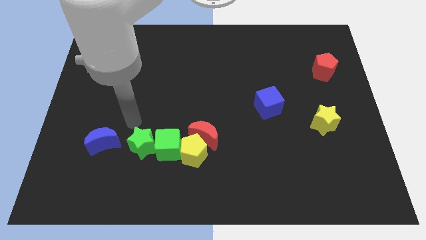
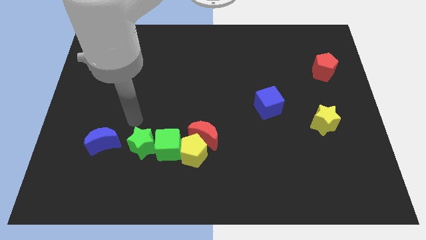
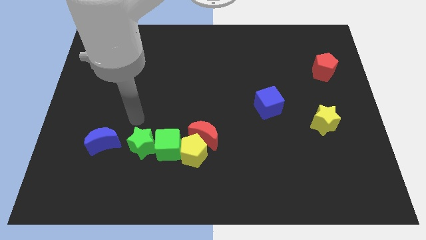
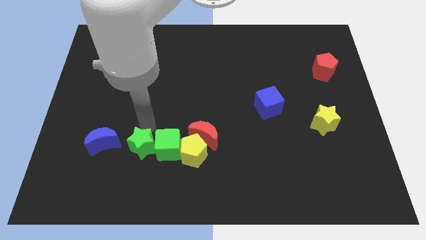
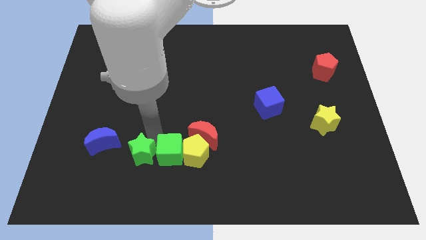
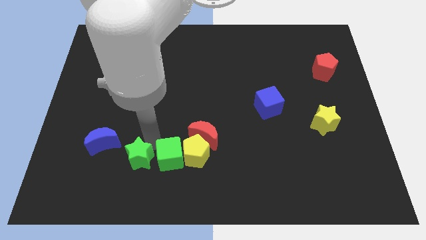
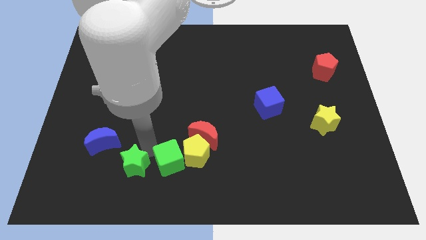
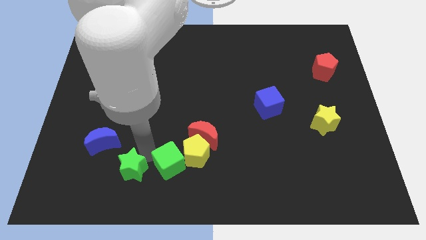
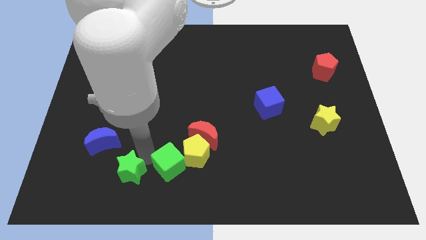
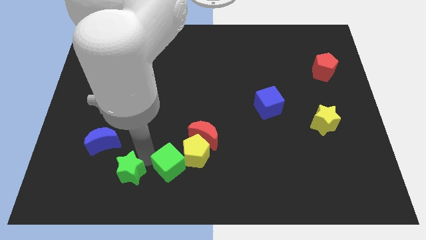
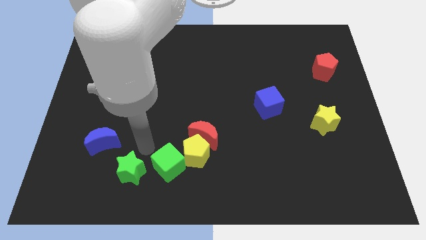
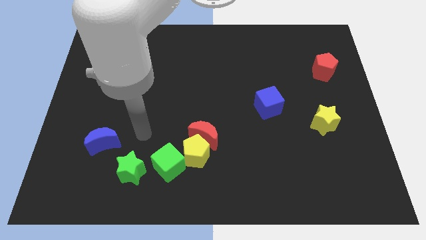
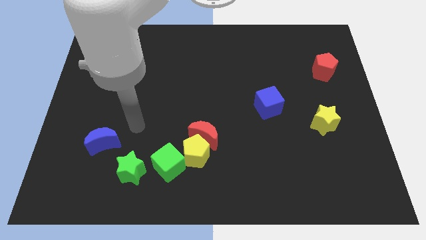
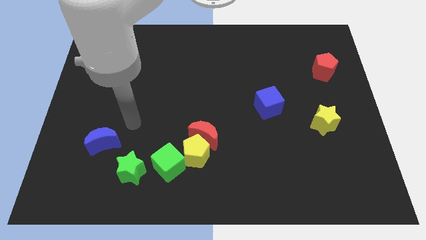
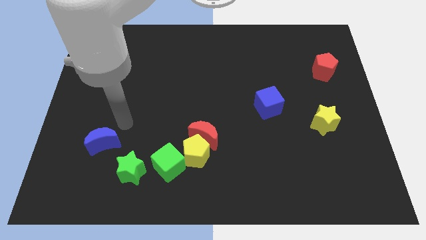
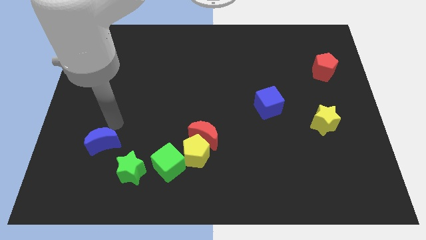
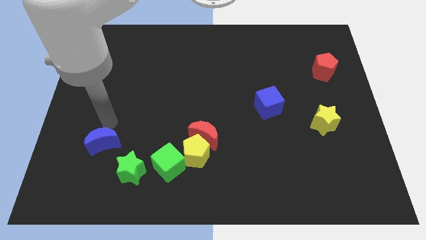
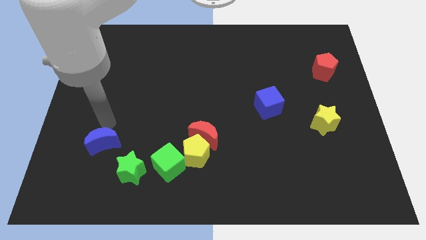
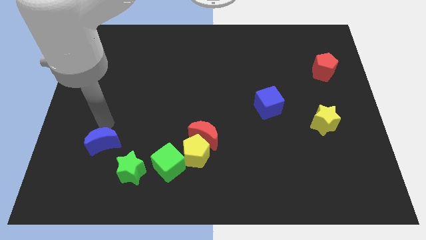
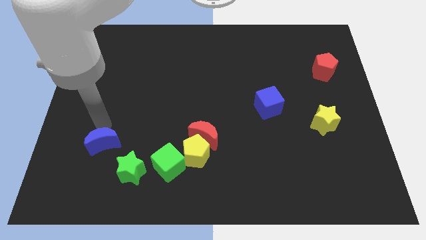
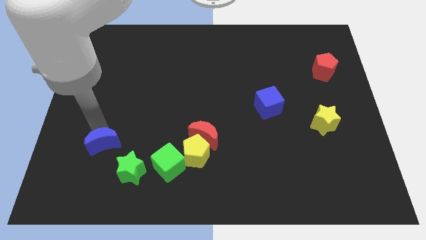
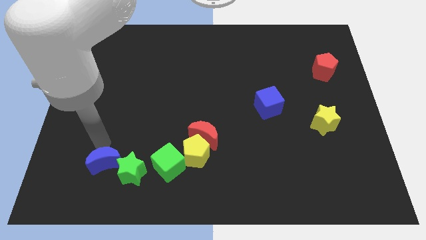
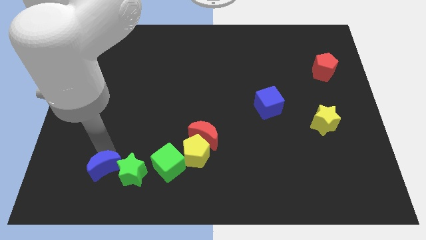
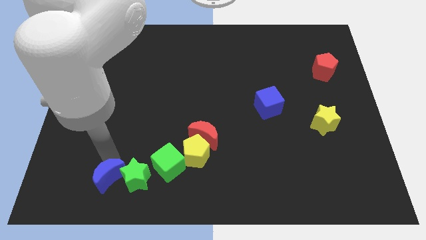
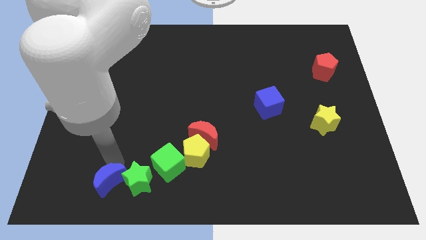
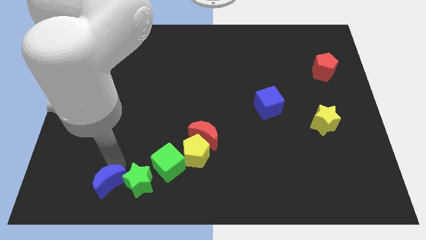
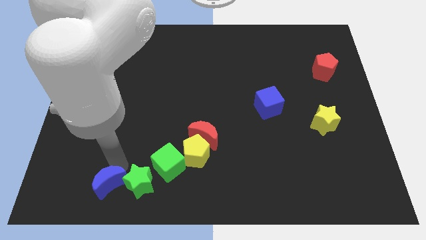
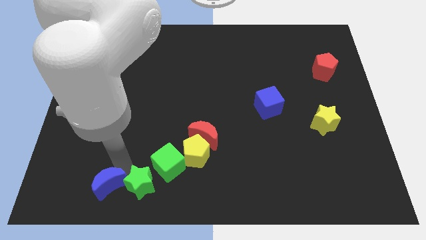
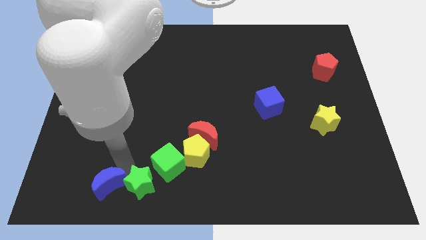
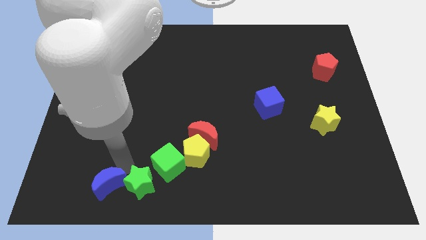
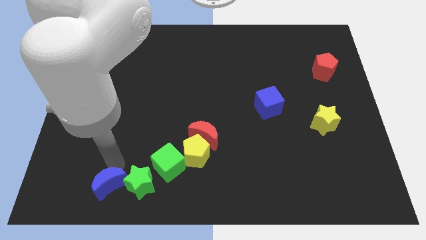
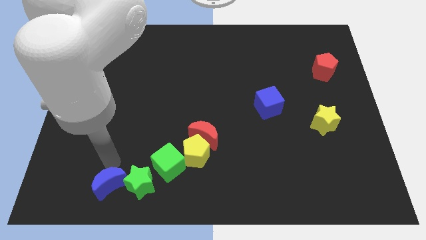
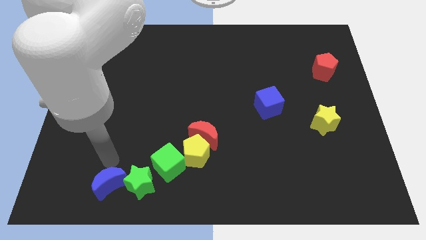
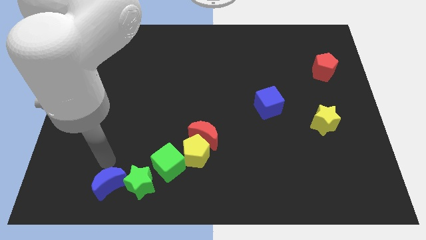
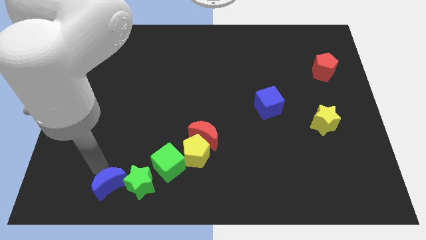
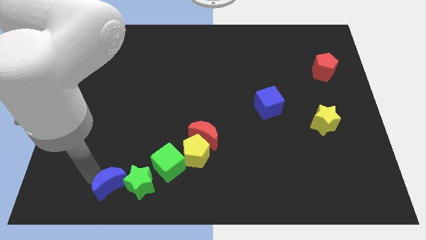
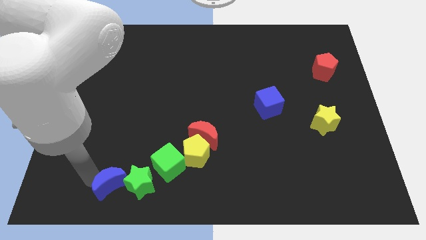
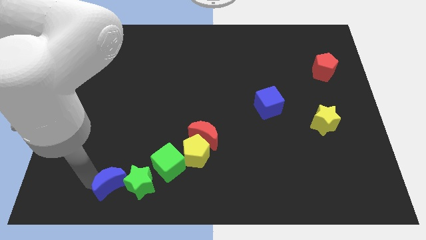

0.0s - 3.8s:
push the horizontal line of blocks downwards to form a diagonal line

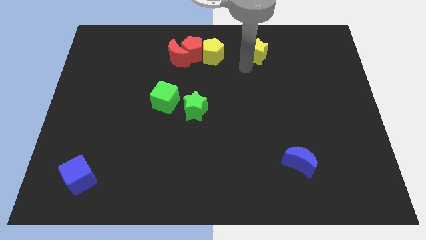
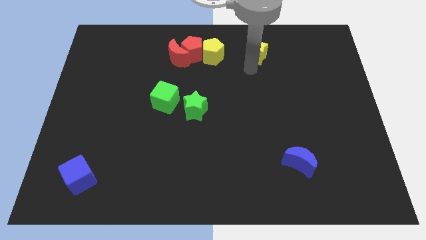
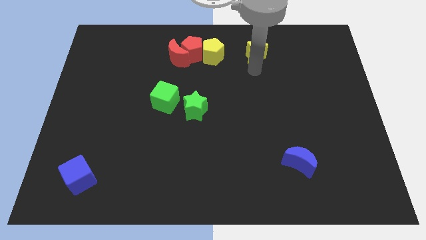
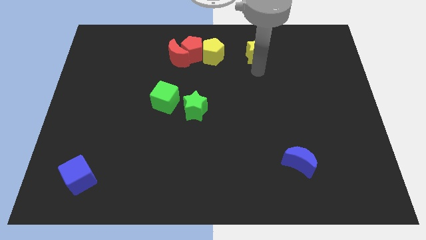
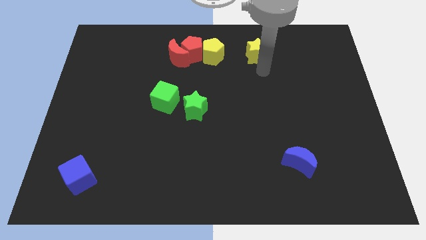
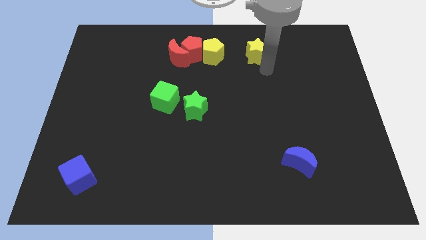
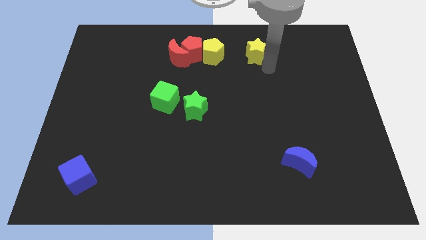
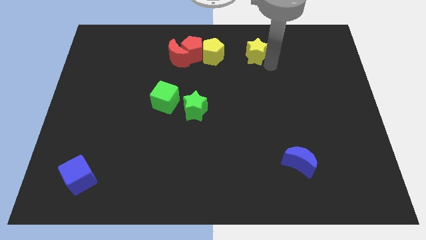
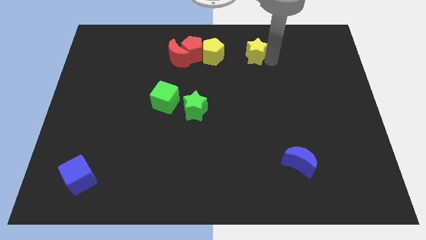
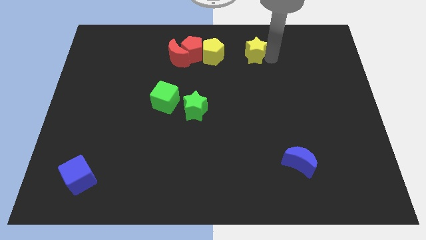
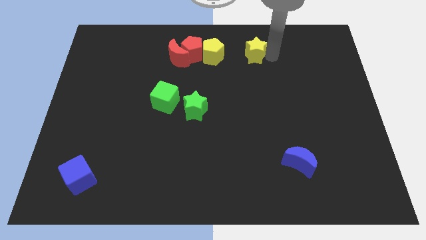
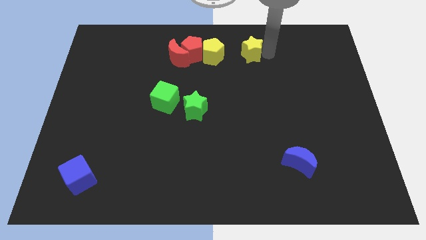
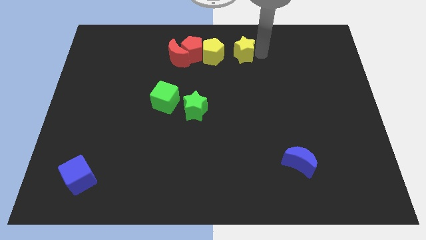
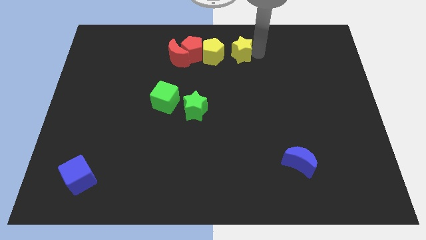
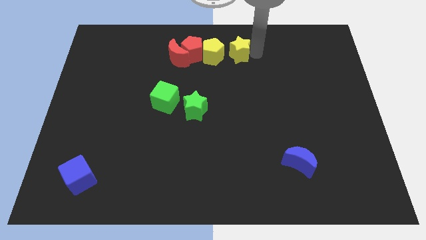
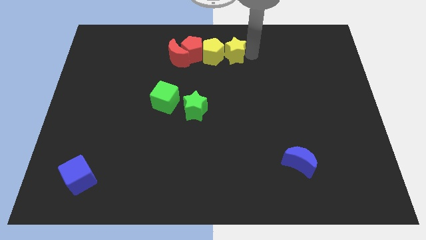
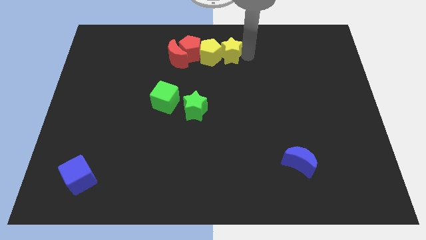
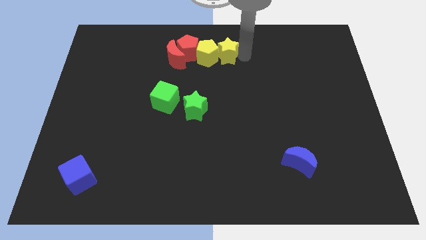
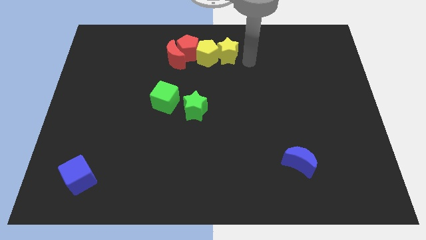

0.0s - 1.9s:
push yellow star into yellow pentagon

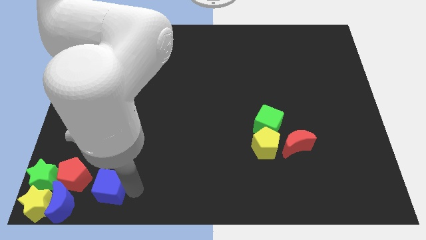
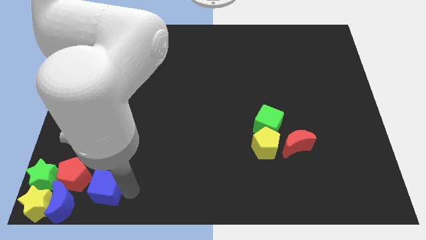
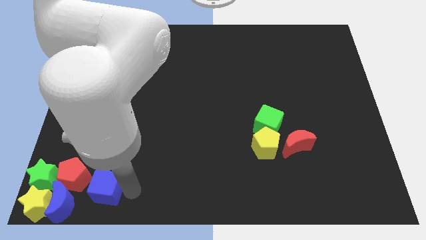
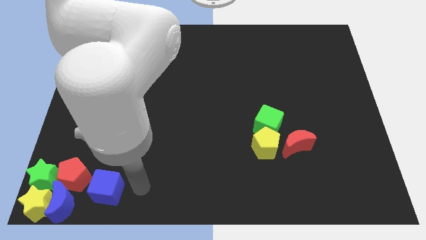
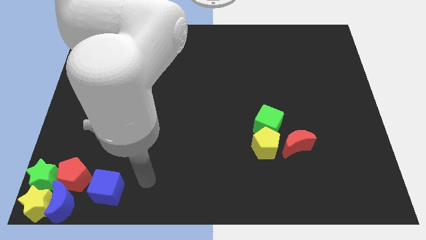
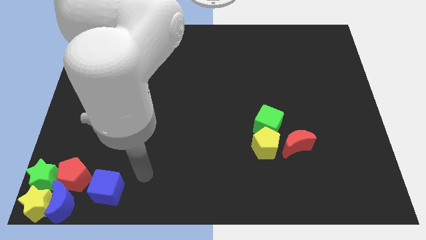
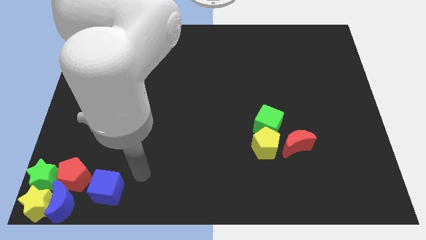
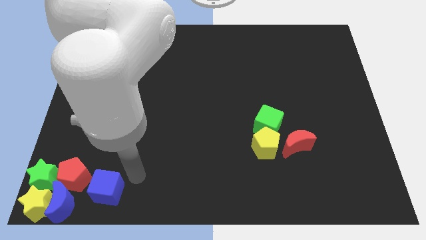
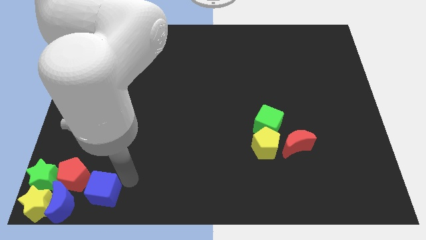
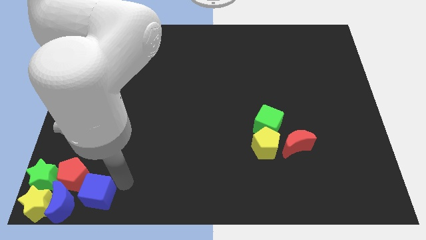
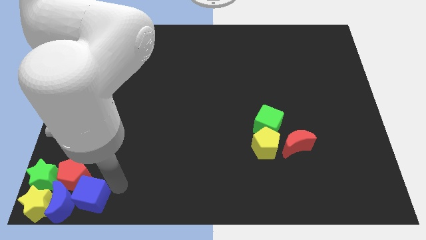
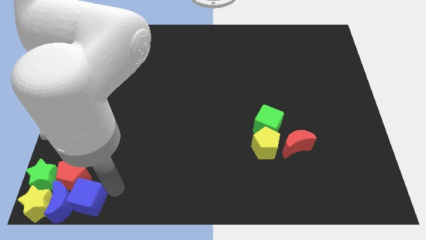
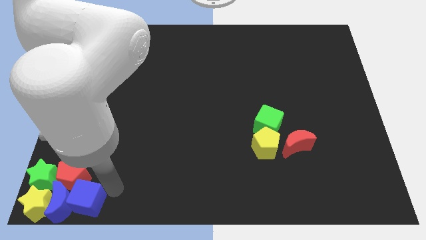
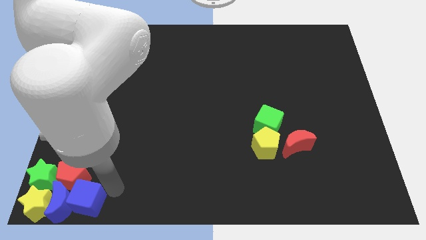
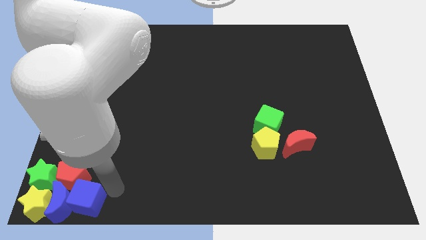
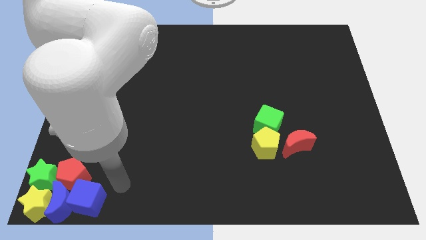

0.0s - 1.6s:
take the blue cube into the right side of the blue crescent

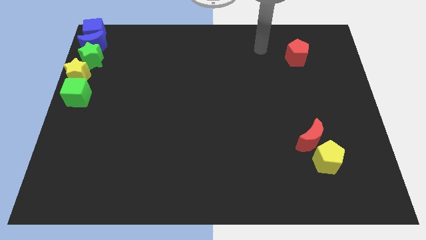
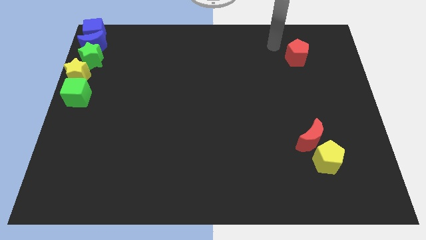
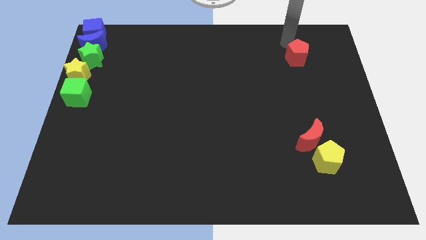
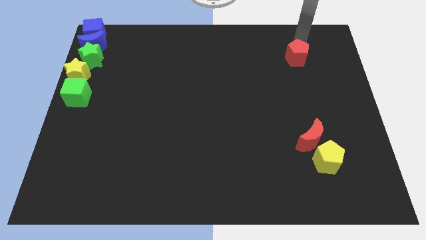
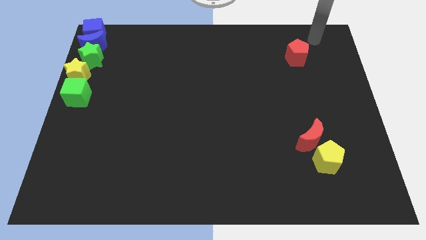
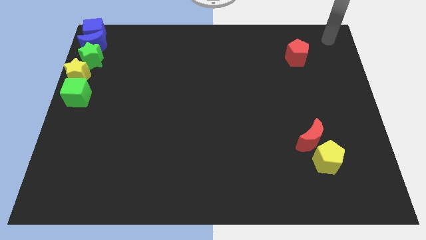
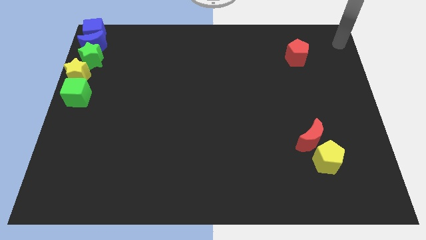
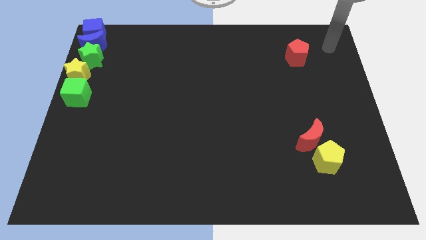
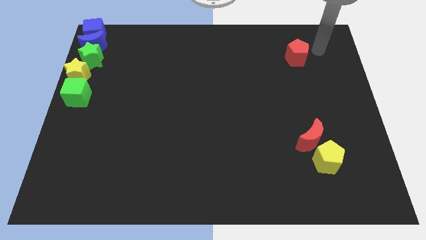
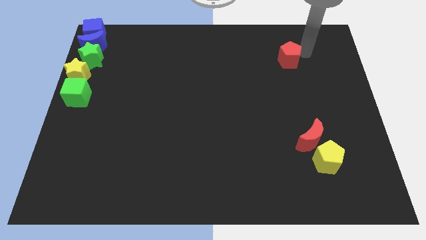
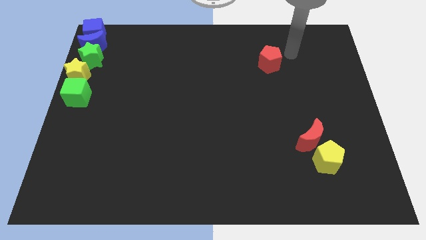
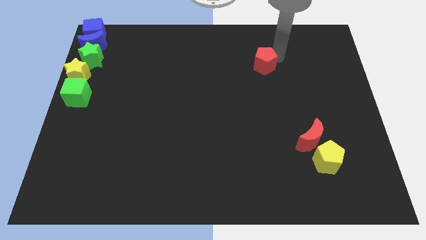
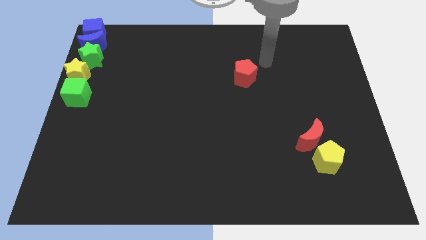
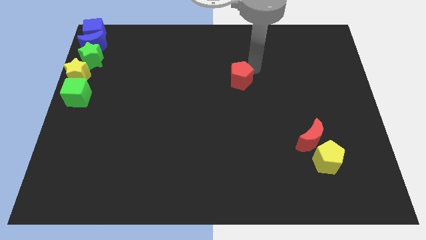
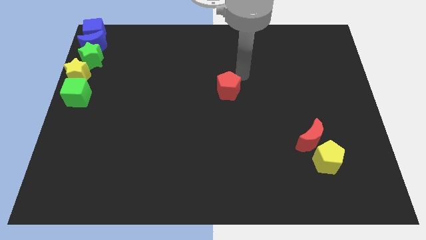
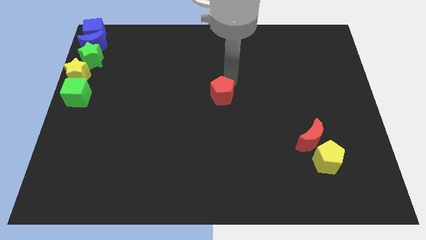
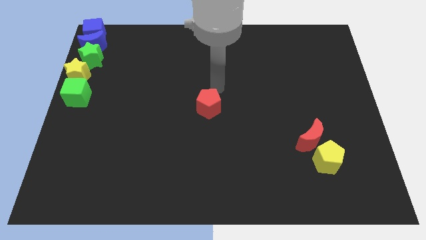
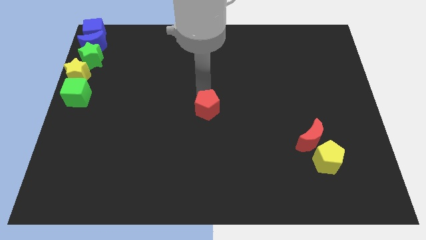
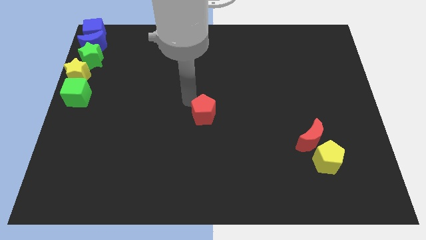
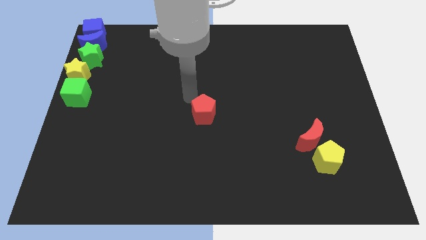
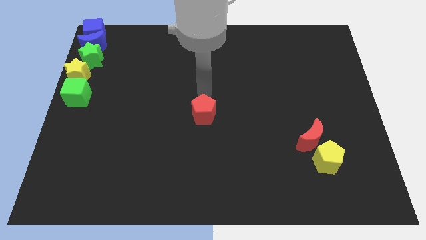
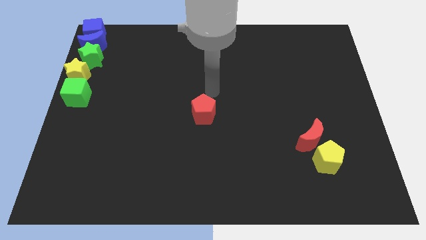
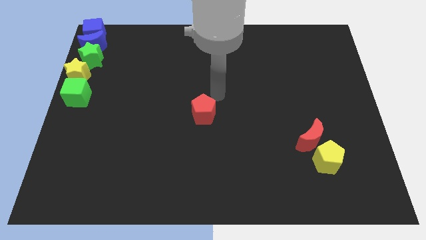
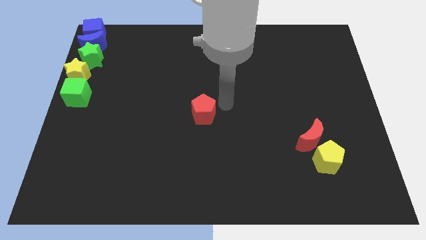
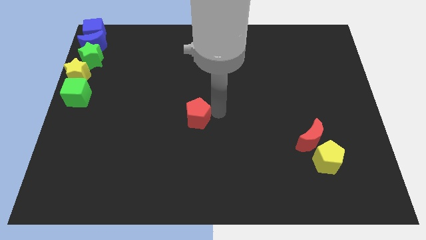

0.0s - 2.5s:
move the red pentagon to the center of board
